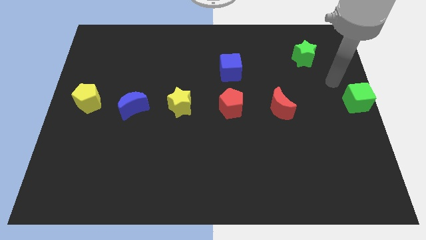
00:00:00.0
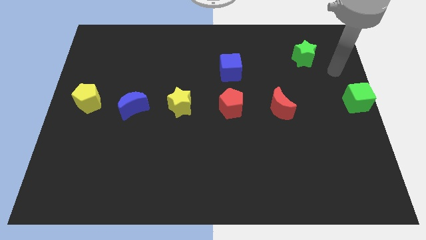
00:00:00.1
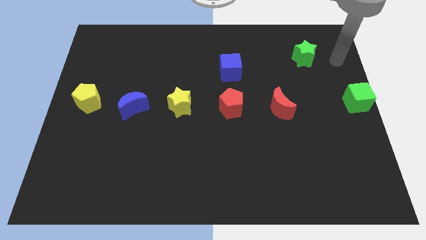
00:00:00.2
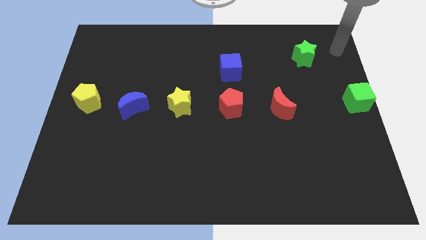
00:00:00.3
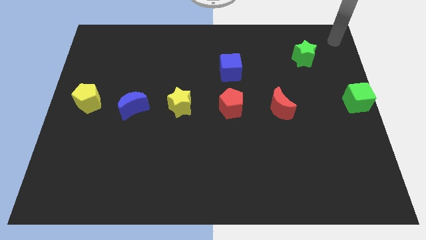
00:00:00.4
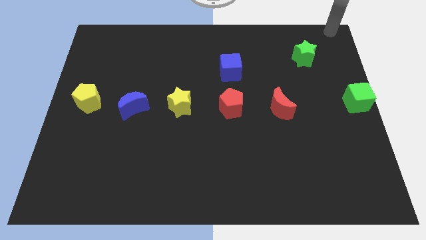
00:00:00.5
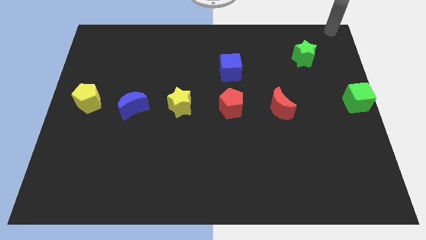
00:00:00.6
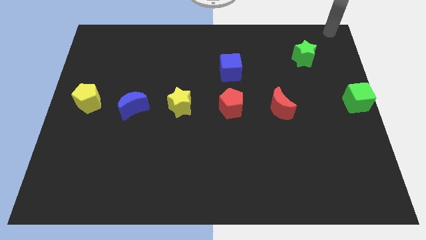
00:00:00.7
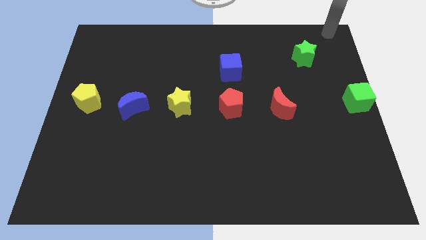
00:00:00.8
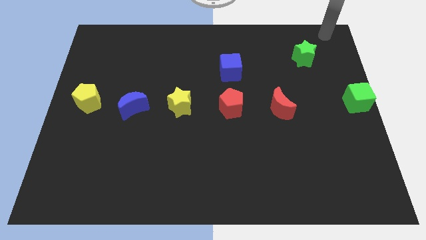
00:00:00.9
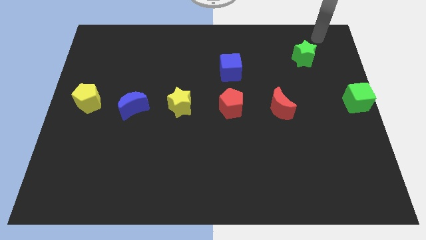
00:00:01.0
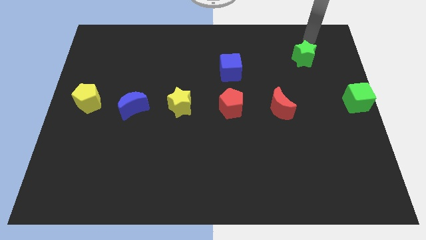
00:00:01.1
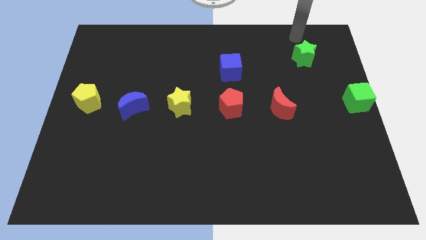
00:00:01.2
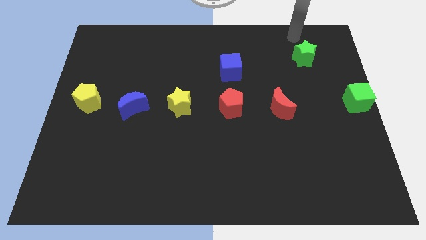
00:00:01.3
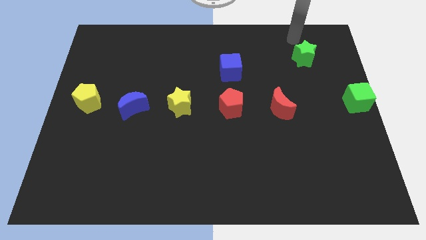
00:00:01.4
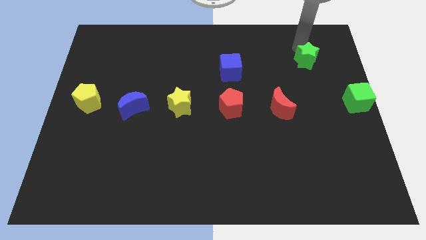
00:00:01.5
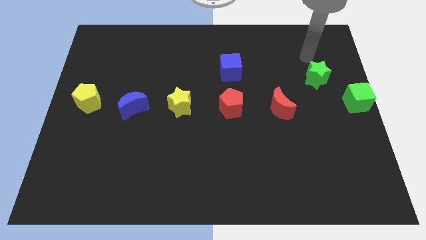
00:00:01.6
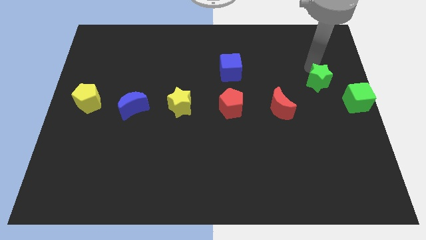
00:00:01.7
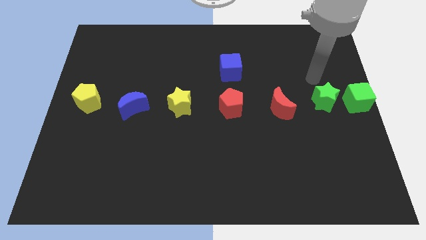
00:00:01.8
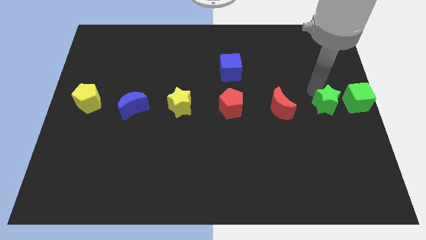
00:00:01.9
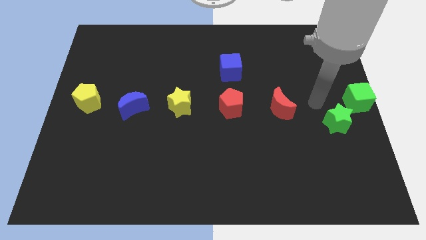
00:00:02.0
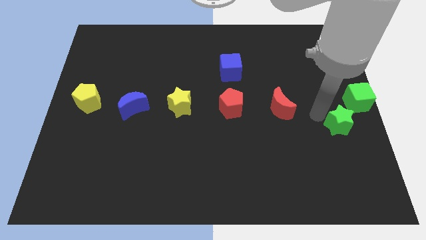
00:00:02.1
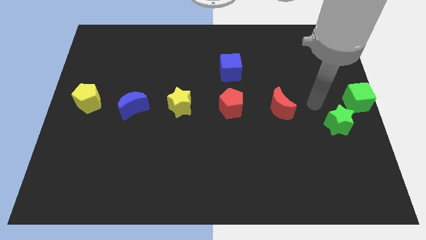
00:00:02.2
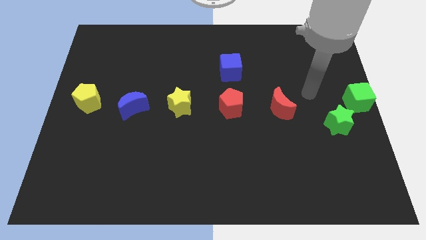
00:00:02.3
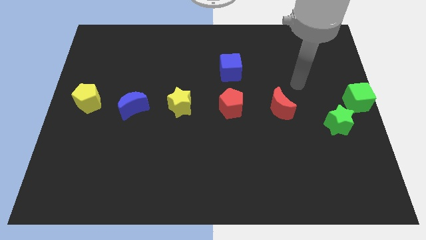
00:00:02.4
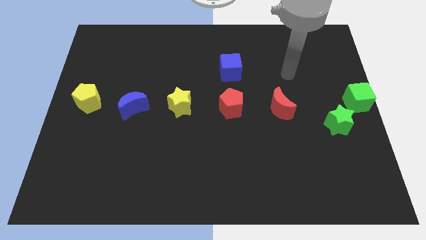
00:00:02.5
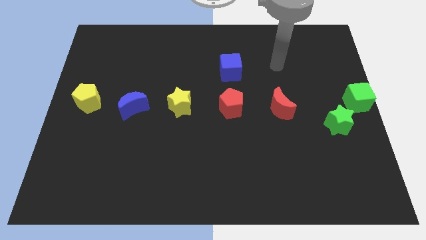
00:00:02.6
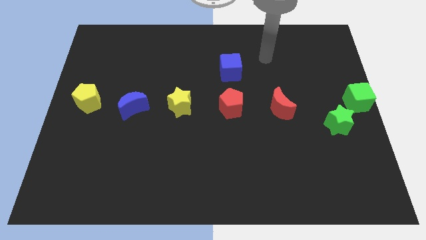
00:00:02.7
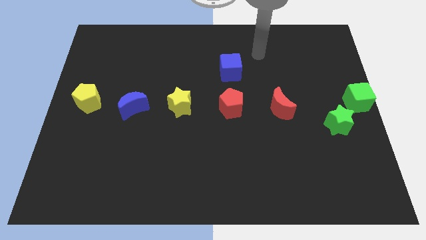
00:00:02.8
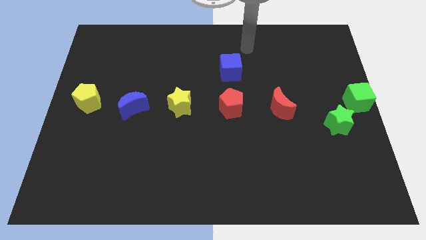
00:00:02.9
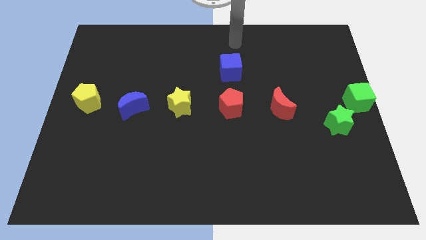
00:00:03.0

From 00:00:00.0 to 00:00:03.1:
push the green star to the bottom left of green cube

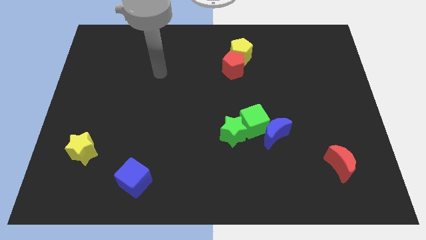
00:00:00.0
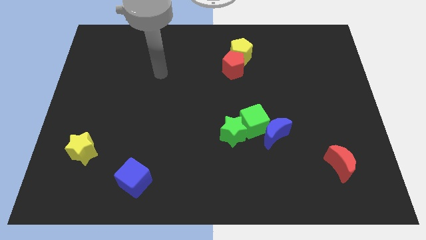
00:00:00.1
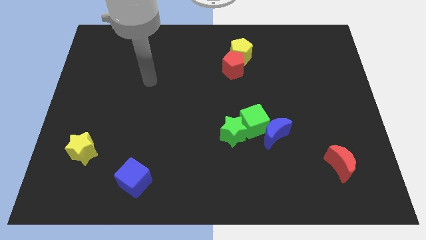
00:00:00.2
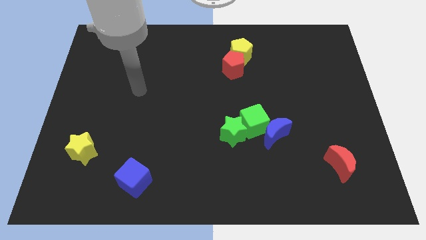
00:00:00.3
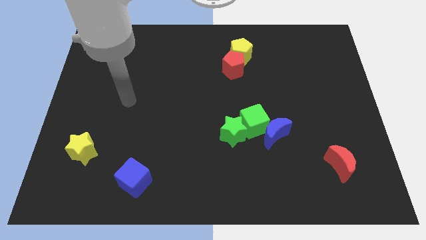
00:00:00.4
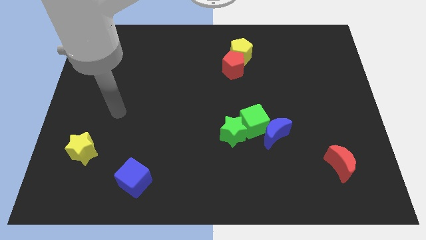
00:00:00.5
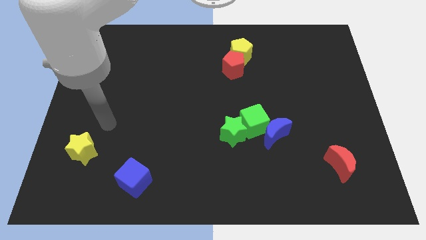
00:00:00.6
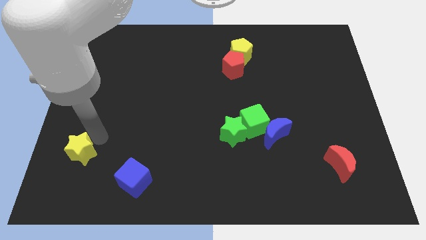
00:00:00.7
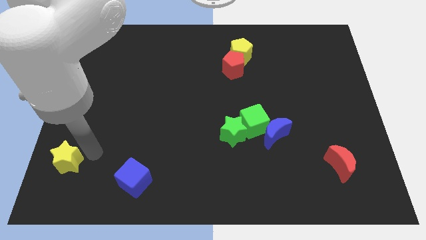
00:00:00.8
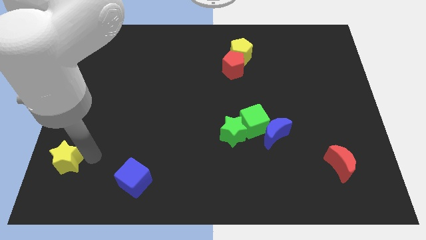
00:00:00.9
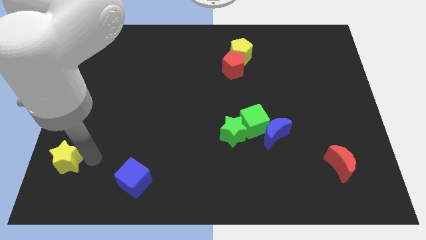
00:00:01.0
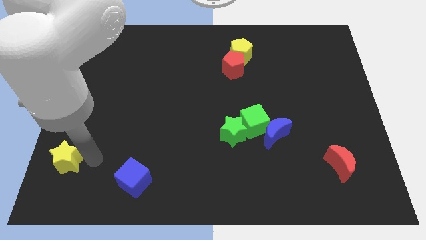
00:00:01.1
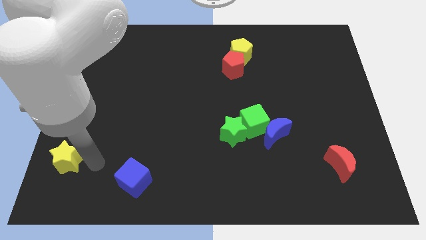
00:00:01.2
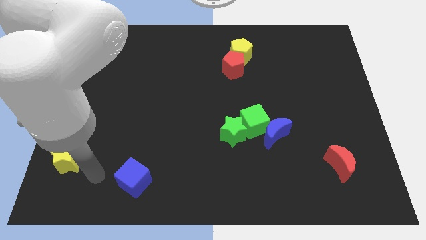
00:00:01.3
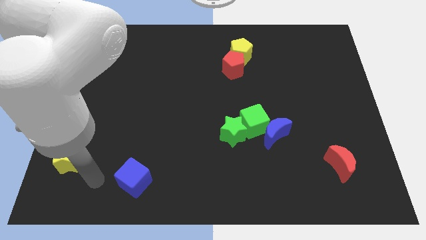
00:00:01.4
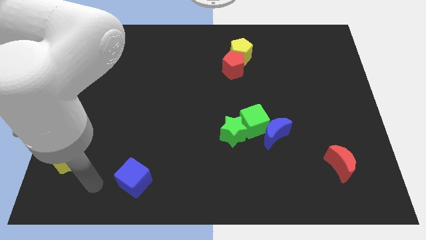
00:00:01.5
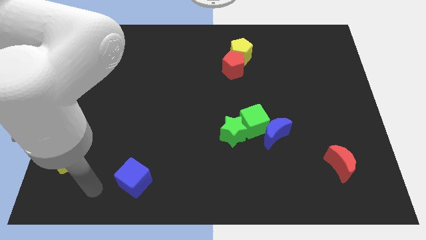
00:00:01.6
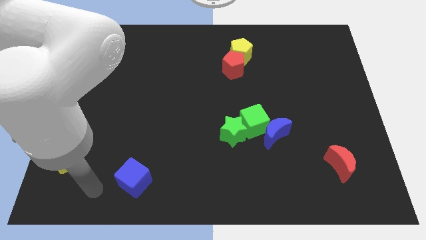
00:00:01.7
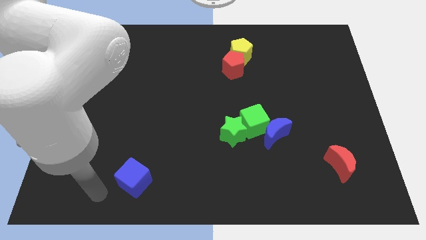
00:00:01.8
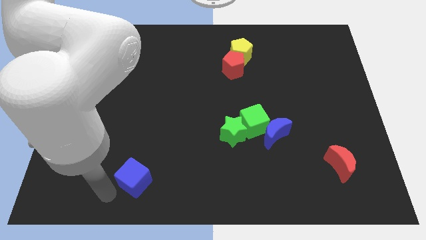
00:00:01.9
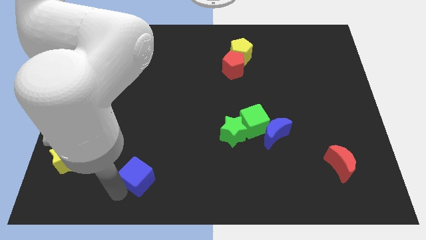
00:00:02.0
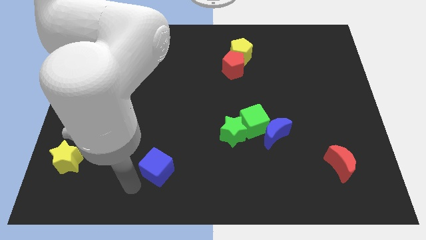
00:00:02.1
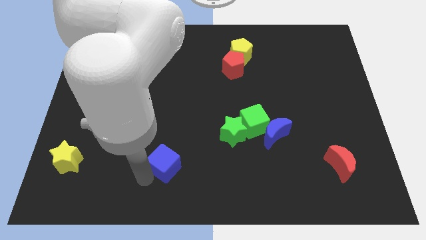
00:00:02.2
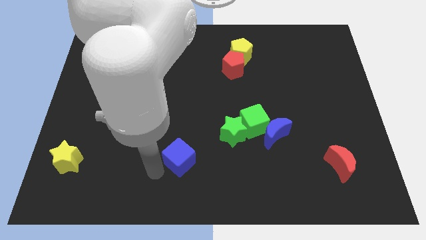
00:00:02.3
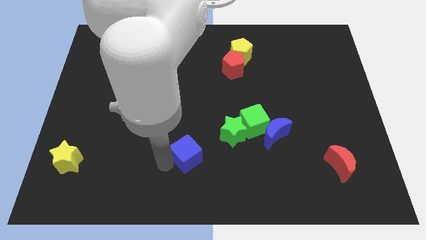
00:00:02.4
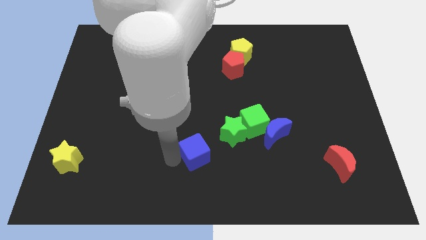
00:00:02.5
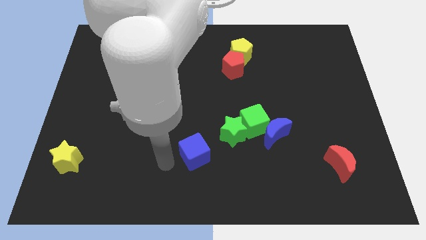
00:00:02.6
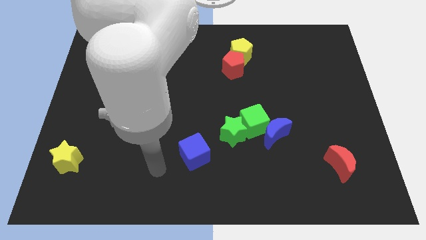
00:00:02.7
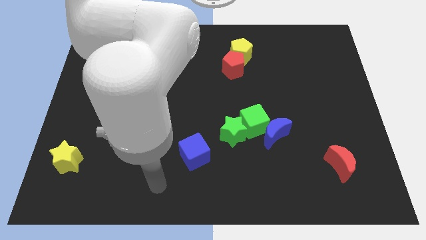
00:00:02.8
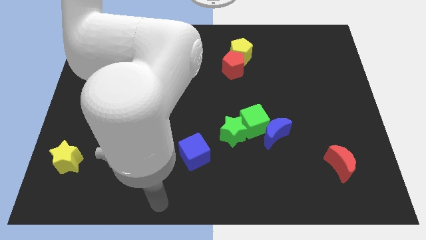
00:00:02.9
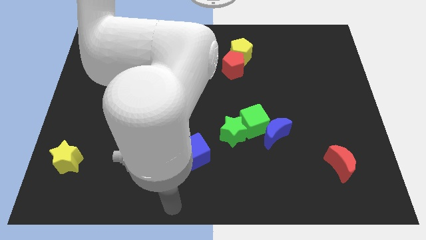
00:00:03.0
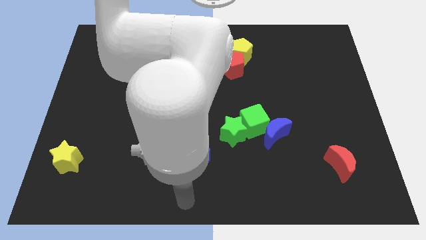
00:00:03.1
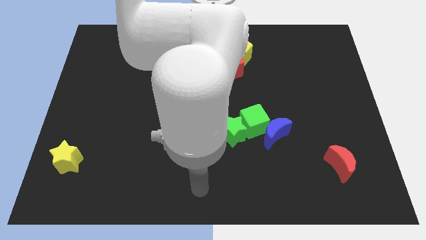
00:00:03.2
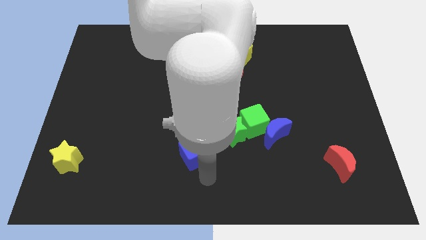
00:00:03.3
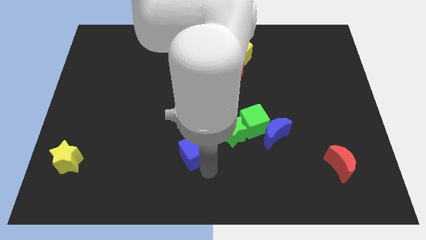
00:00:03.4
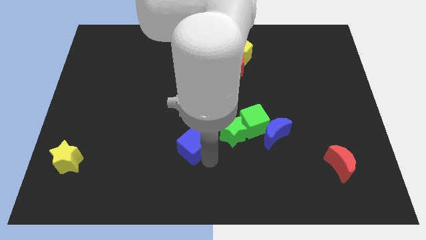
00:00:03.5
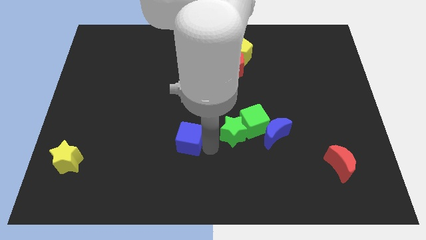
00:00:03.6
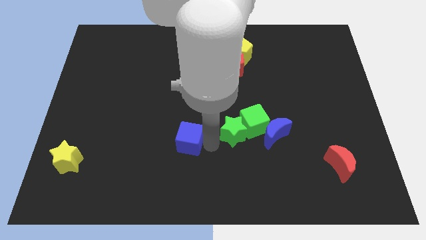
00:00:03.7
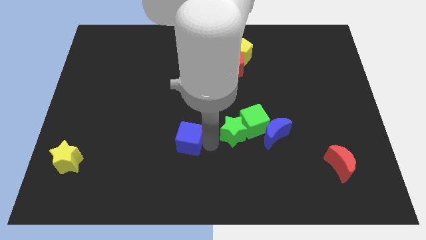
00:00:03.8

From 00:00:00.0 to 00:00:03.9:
move the blue cube parallel to the left of the green star

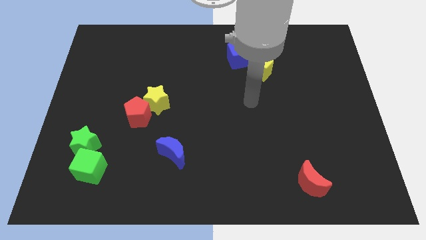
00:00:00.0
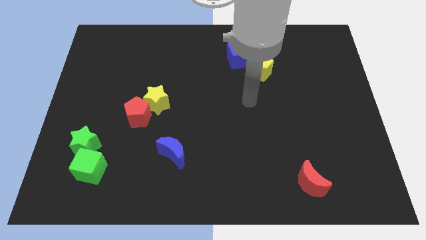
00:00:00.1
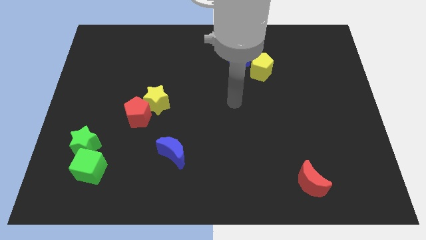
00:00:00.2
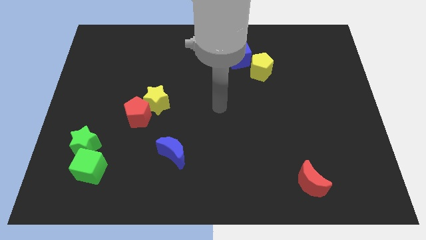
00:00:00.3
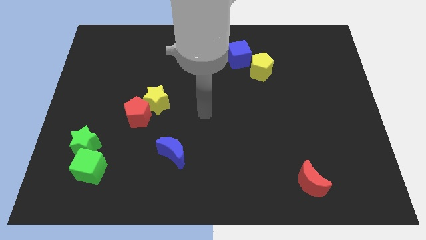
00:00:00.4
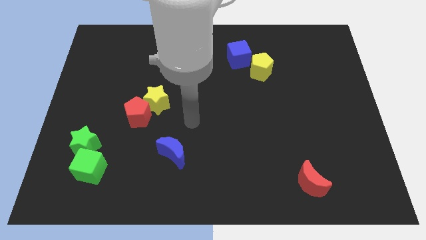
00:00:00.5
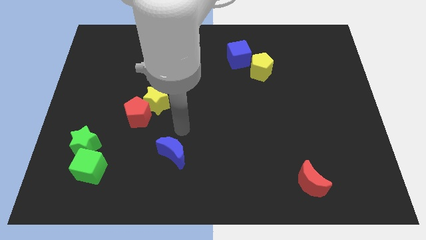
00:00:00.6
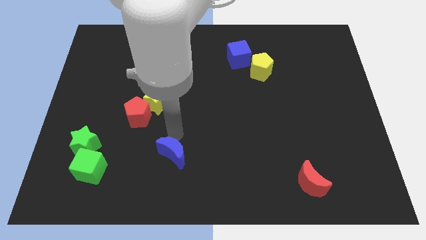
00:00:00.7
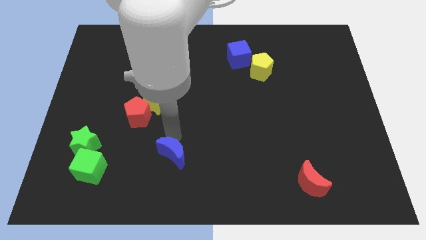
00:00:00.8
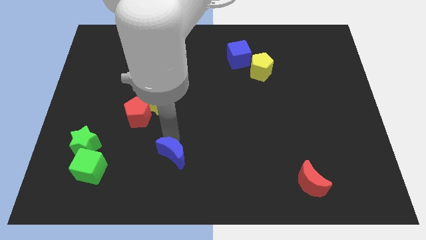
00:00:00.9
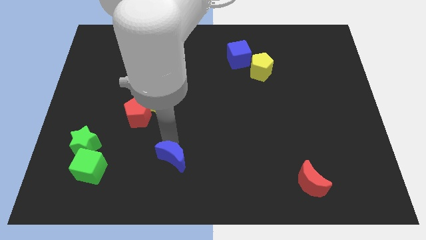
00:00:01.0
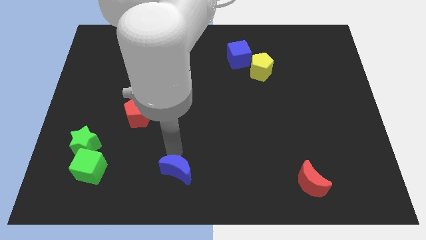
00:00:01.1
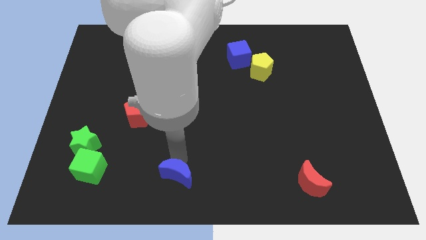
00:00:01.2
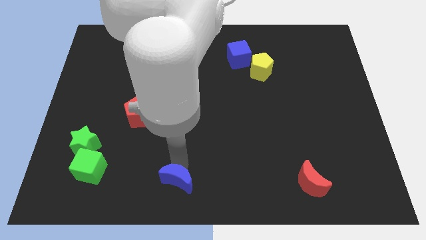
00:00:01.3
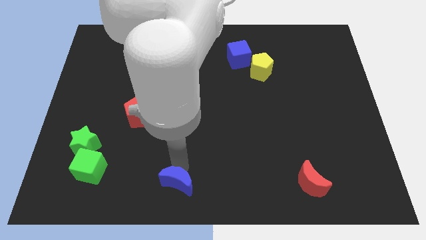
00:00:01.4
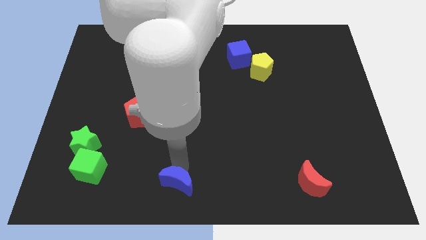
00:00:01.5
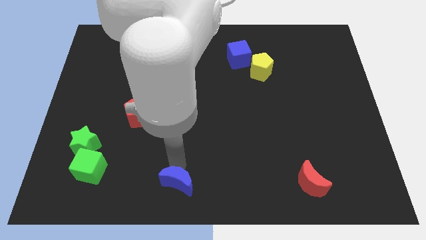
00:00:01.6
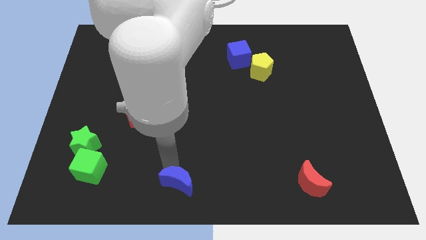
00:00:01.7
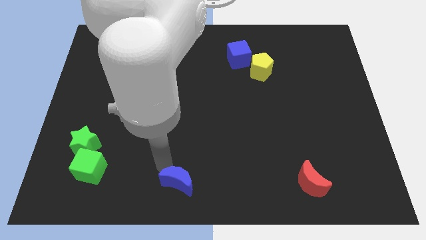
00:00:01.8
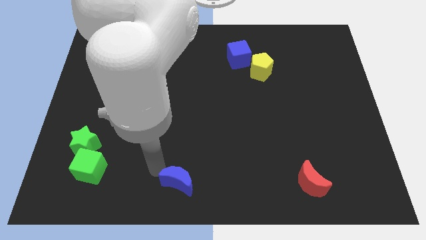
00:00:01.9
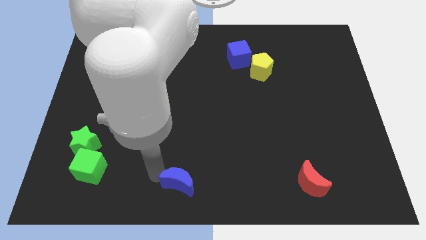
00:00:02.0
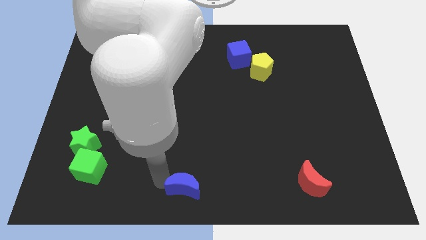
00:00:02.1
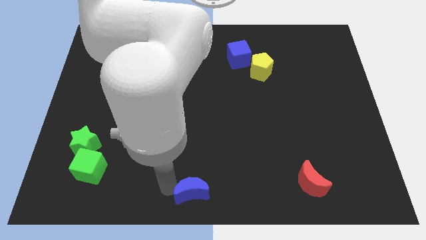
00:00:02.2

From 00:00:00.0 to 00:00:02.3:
push the blue crescent
